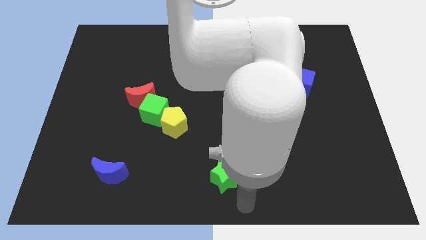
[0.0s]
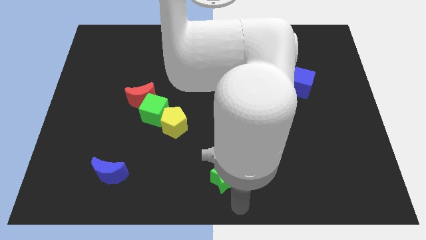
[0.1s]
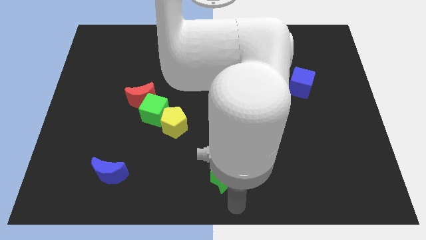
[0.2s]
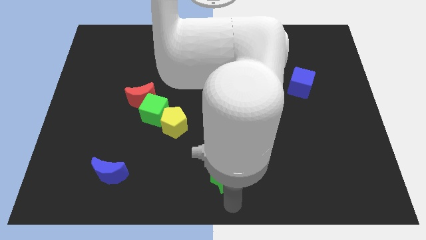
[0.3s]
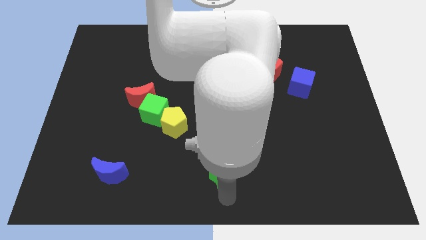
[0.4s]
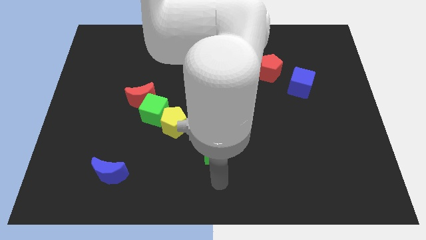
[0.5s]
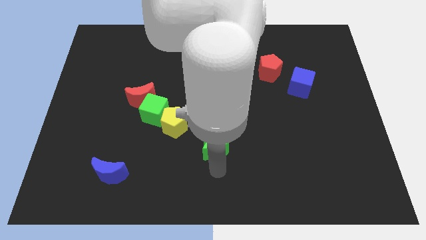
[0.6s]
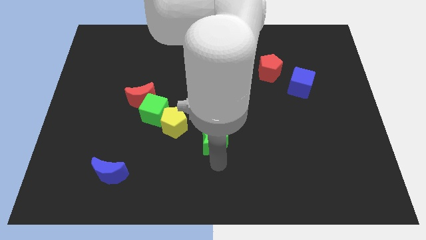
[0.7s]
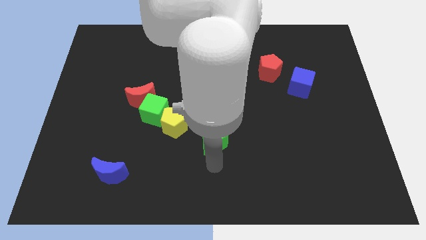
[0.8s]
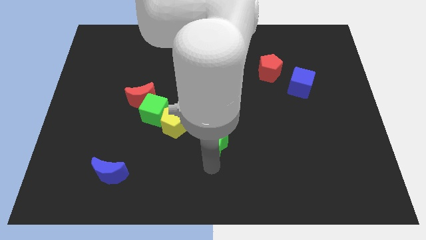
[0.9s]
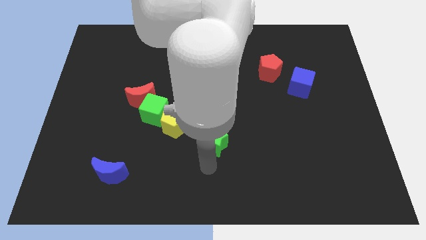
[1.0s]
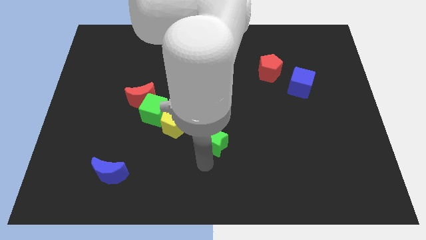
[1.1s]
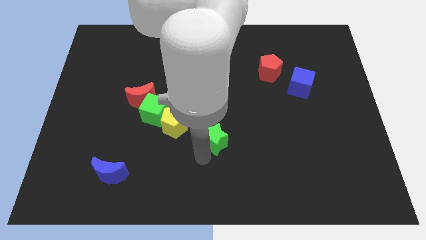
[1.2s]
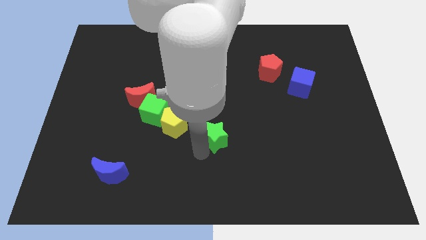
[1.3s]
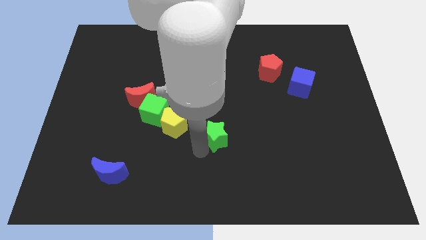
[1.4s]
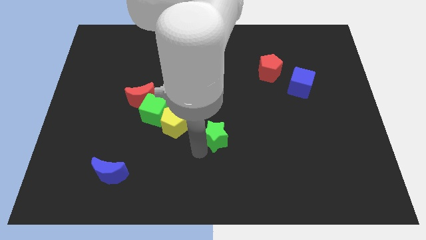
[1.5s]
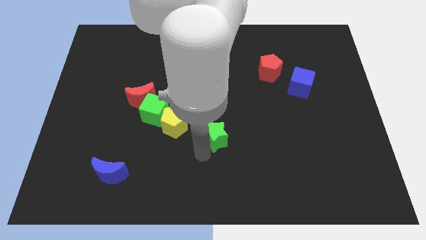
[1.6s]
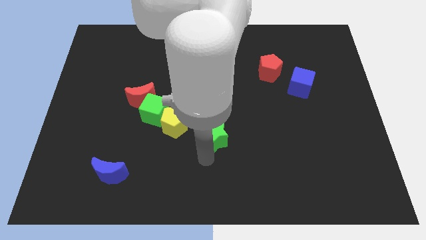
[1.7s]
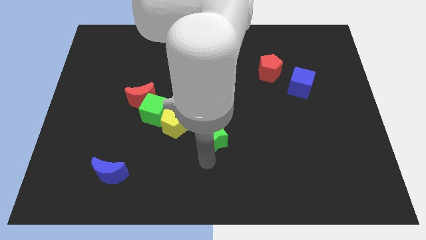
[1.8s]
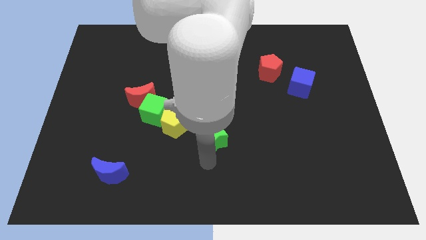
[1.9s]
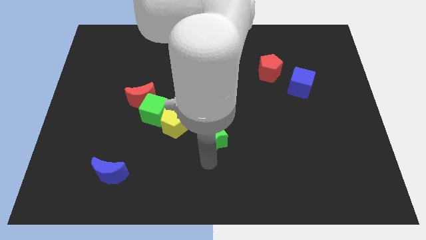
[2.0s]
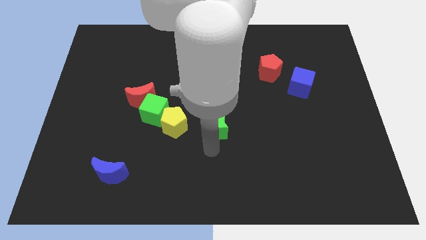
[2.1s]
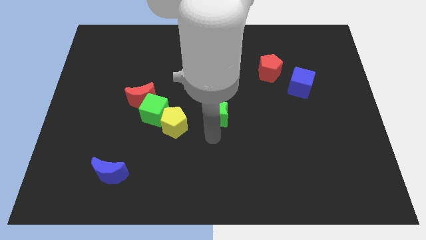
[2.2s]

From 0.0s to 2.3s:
put the green star right to the yellow

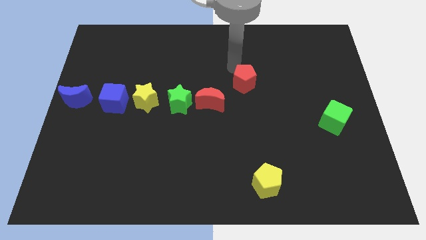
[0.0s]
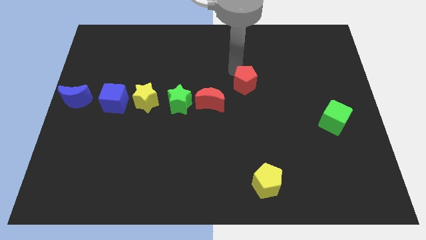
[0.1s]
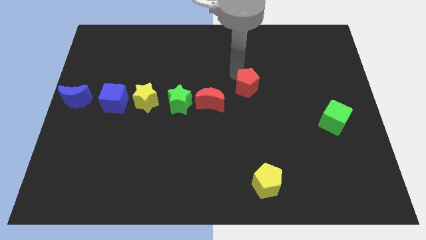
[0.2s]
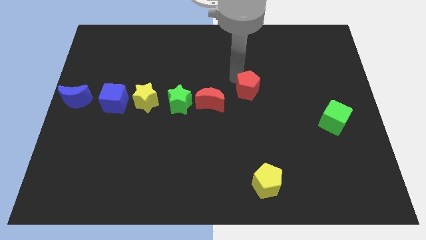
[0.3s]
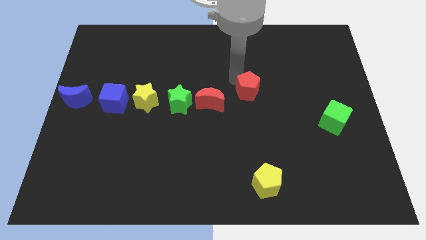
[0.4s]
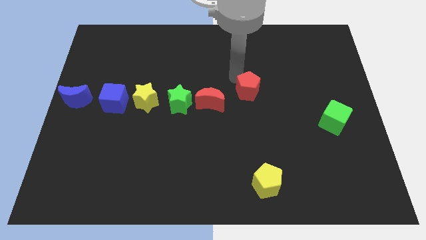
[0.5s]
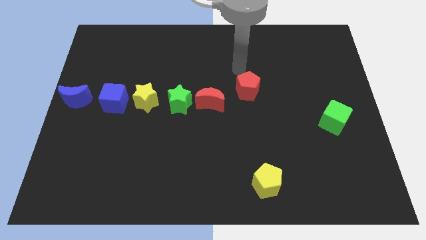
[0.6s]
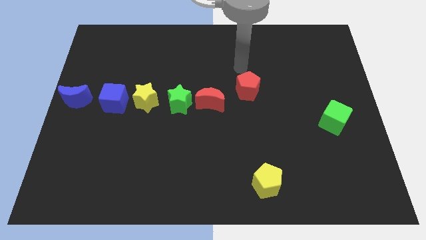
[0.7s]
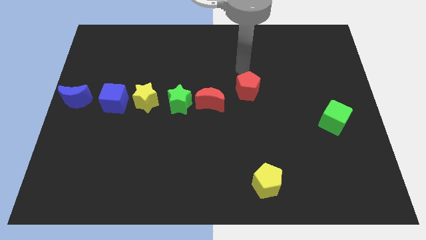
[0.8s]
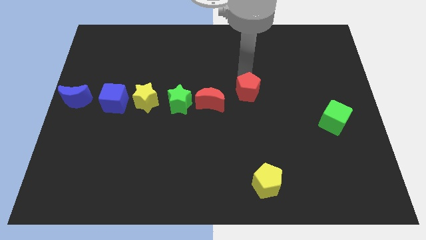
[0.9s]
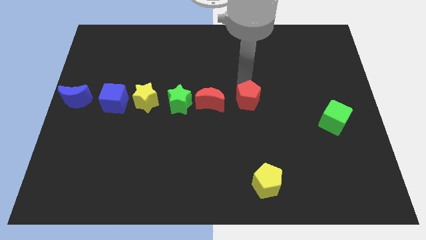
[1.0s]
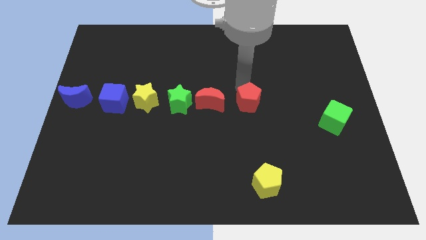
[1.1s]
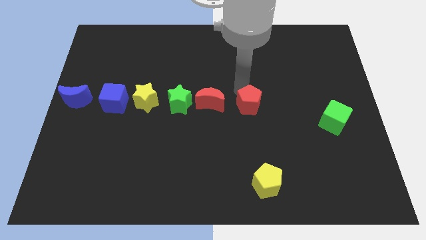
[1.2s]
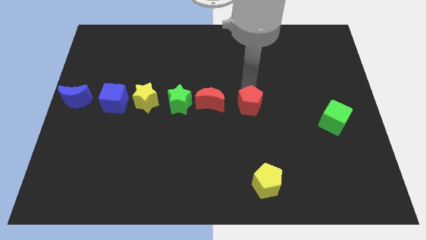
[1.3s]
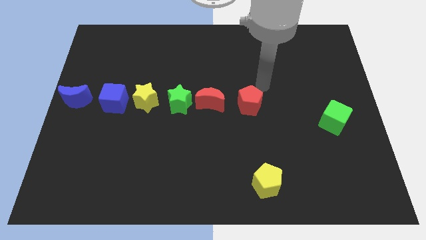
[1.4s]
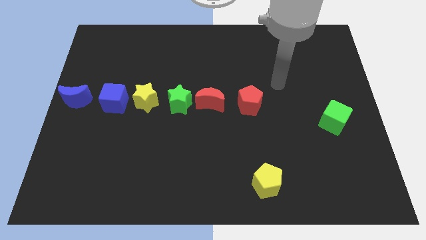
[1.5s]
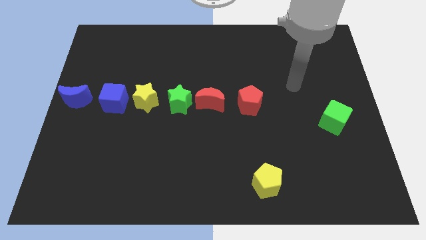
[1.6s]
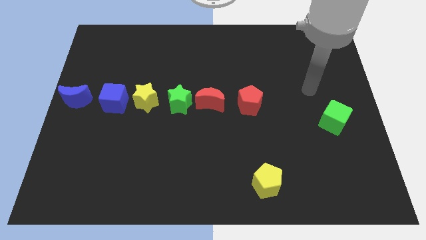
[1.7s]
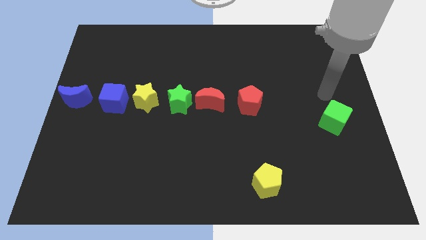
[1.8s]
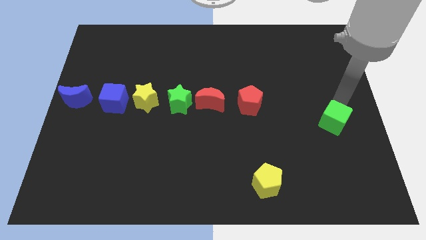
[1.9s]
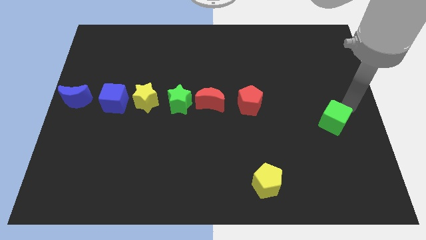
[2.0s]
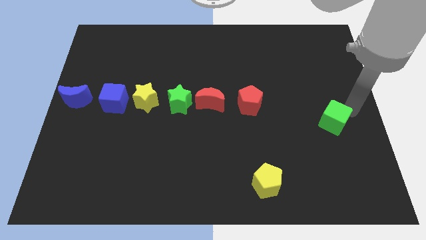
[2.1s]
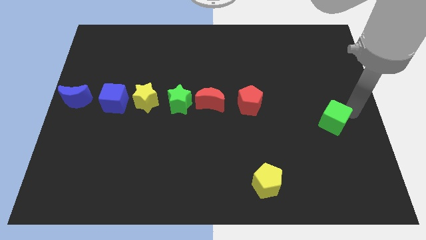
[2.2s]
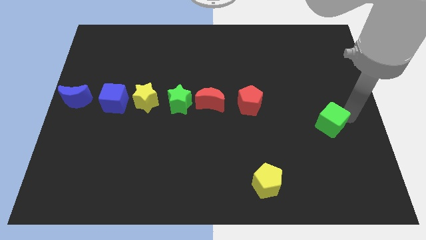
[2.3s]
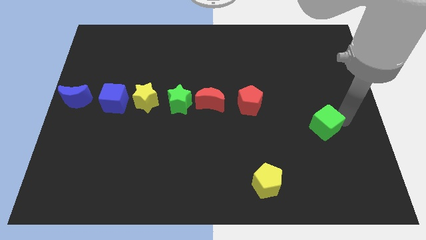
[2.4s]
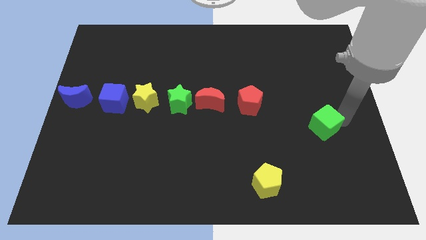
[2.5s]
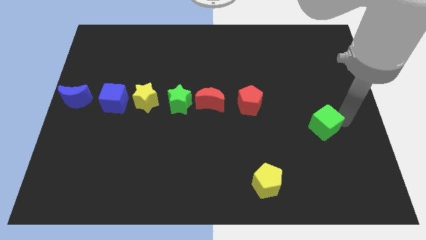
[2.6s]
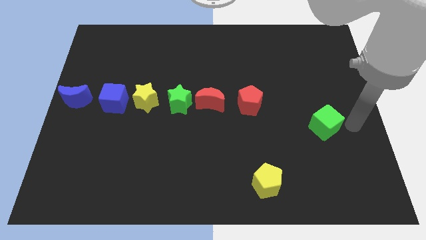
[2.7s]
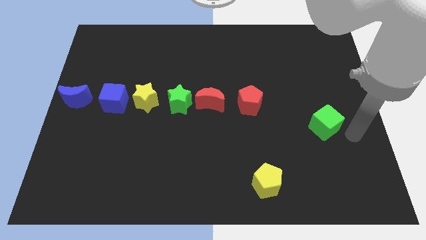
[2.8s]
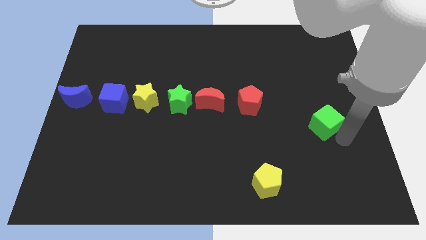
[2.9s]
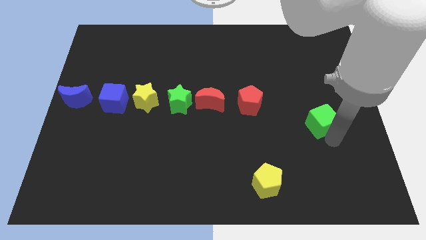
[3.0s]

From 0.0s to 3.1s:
slightly push the red pentagon towards the red crescent

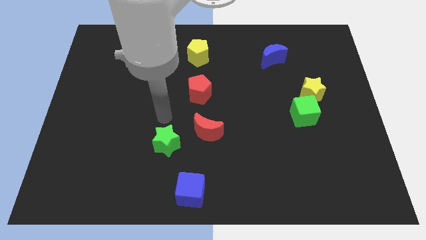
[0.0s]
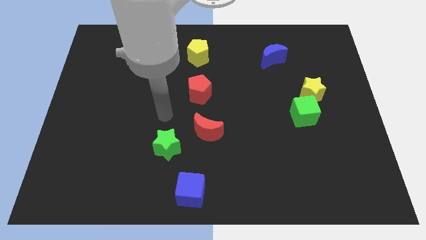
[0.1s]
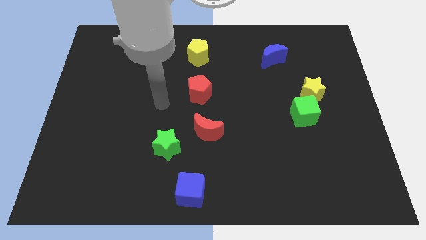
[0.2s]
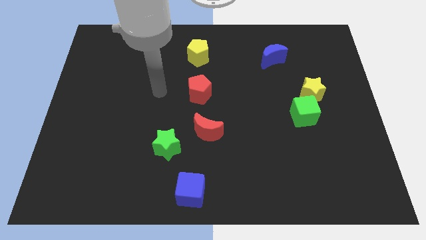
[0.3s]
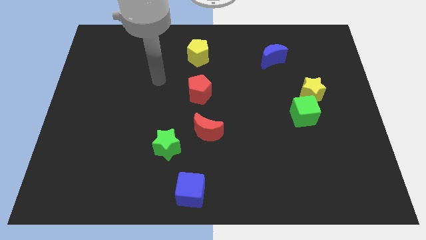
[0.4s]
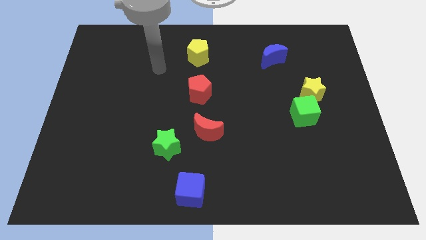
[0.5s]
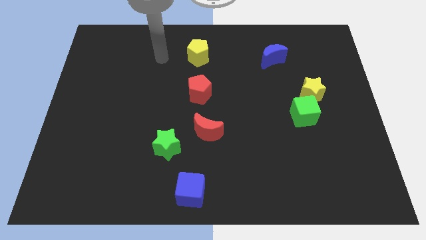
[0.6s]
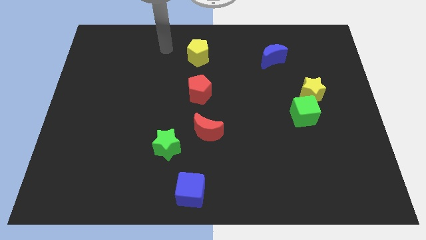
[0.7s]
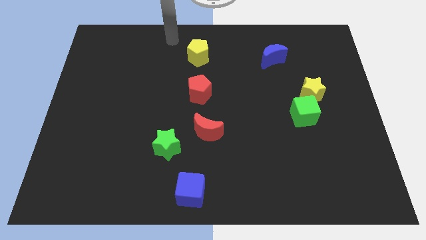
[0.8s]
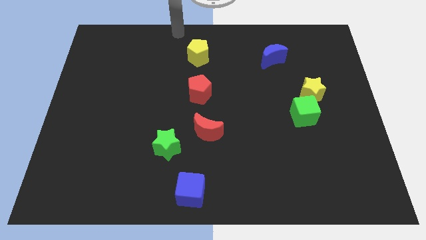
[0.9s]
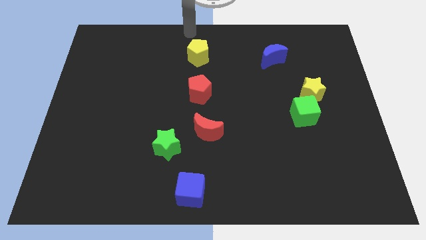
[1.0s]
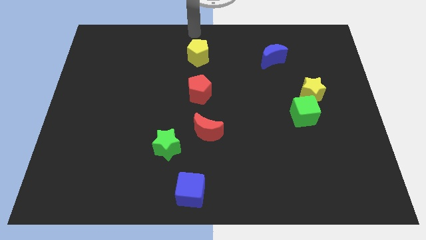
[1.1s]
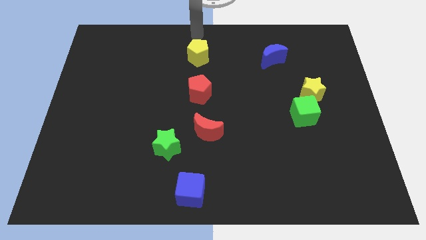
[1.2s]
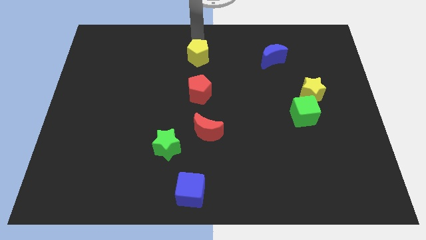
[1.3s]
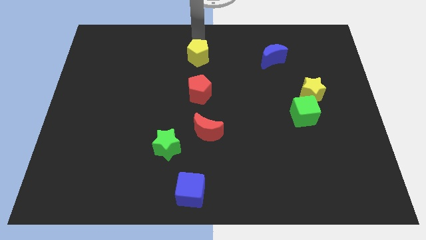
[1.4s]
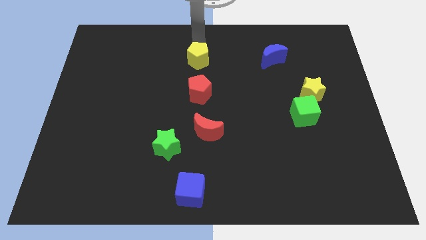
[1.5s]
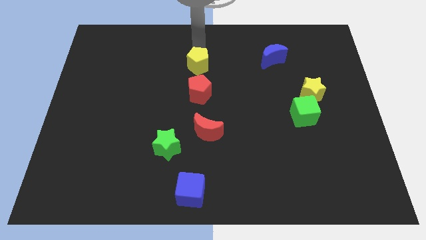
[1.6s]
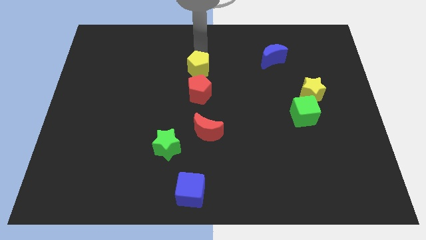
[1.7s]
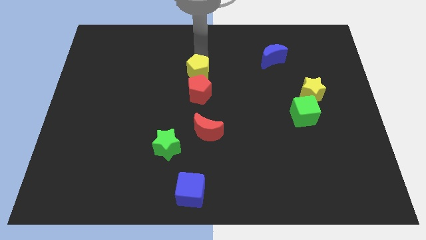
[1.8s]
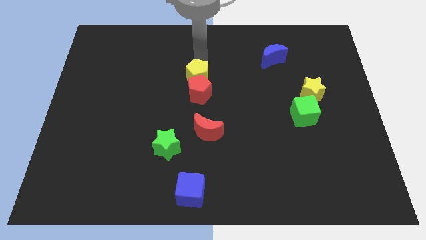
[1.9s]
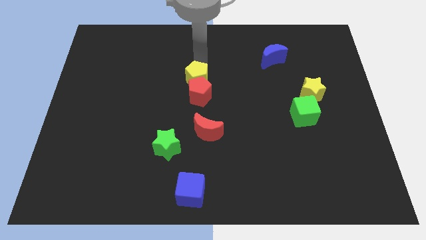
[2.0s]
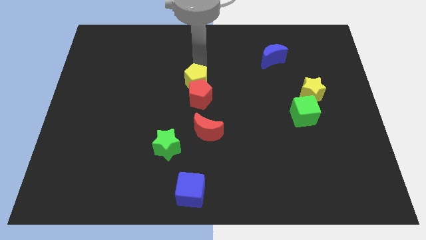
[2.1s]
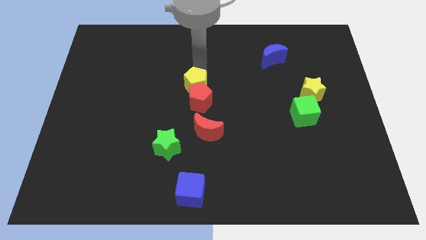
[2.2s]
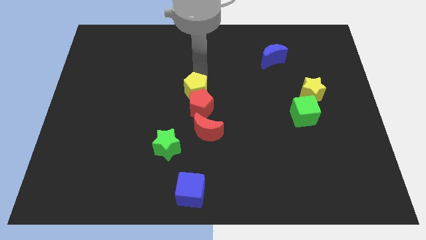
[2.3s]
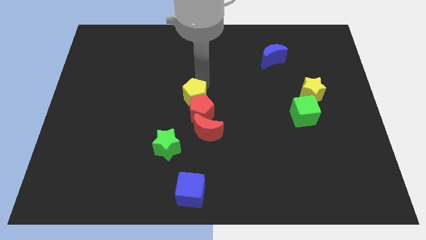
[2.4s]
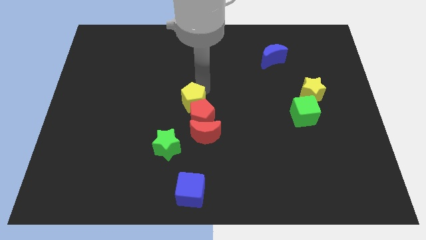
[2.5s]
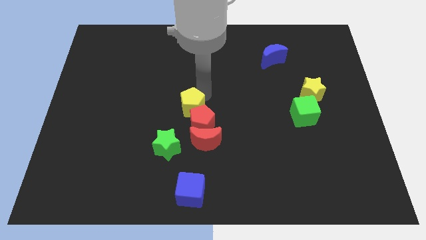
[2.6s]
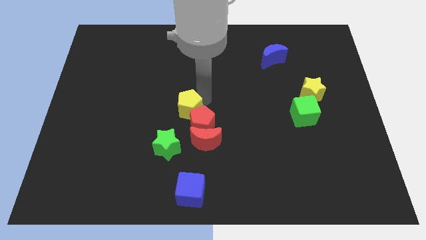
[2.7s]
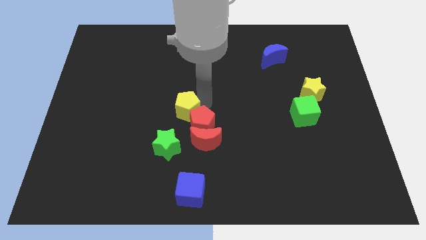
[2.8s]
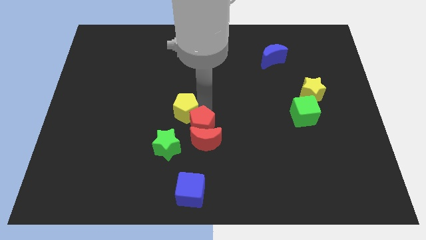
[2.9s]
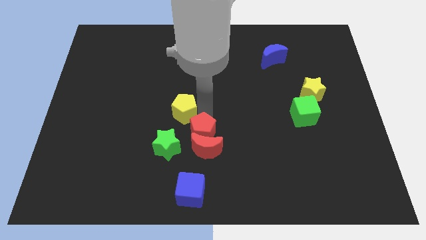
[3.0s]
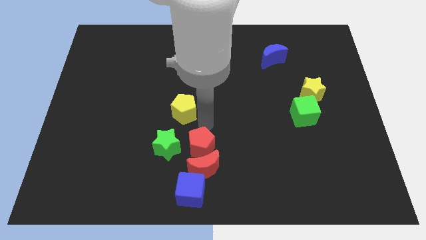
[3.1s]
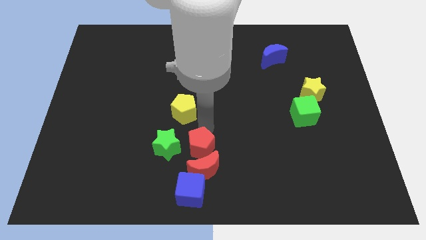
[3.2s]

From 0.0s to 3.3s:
move red pentagon yellow pentagon and red moon towards the blue cube

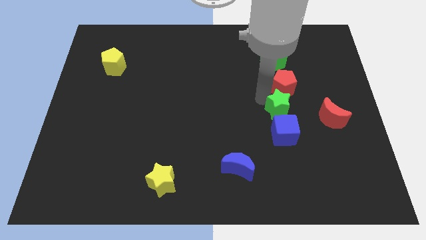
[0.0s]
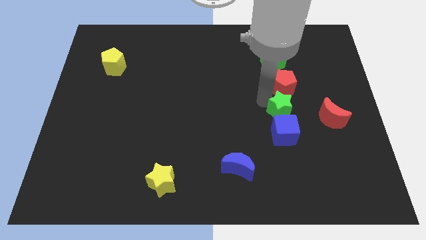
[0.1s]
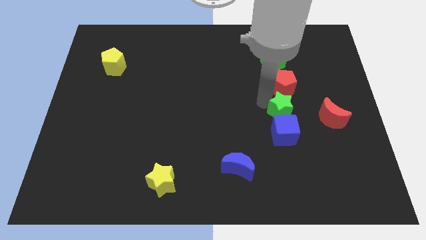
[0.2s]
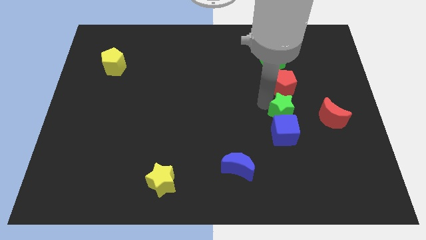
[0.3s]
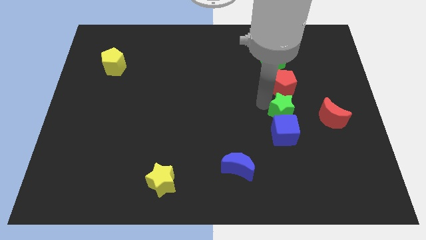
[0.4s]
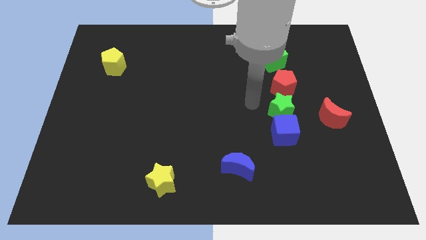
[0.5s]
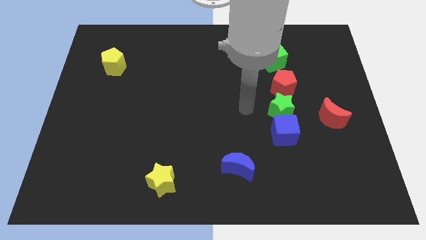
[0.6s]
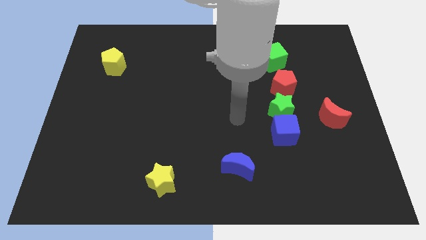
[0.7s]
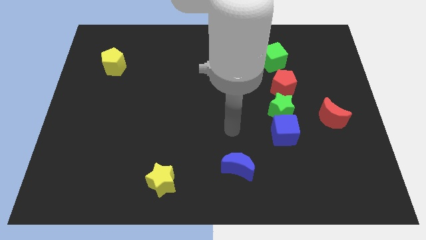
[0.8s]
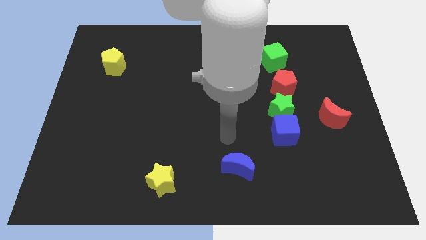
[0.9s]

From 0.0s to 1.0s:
slide the green star into the blue cube
